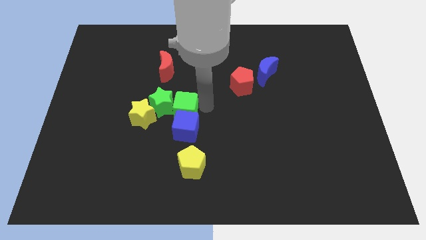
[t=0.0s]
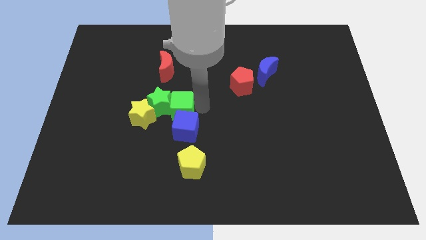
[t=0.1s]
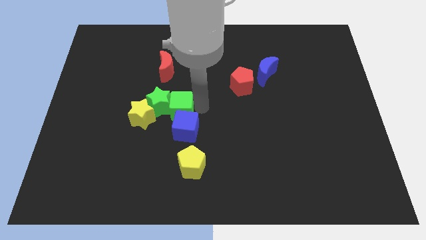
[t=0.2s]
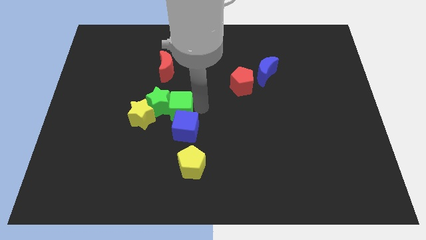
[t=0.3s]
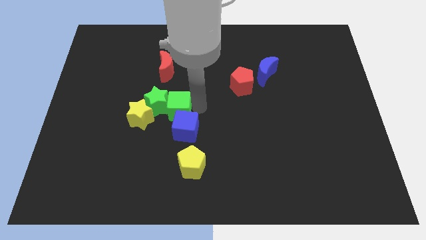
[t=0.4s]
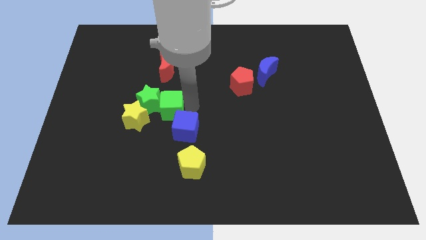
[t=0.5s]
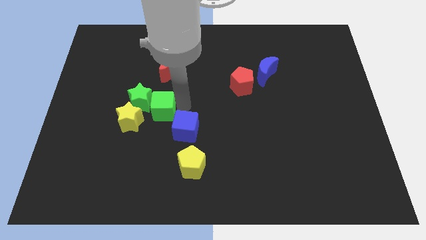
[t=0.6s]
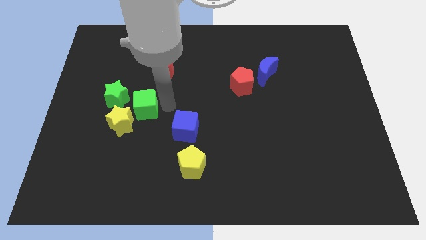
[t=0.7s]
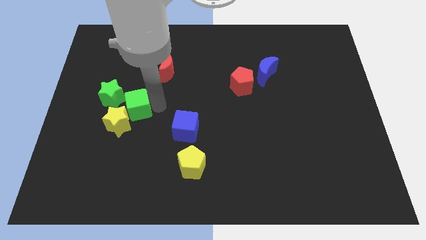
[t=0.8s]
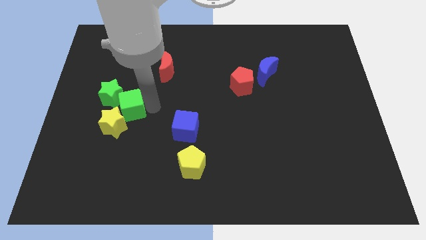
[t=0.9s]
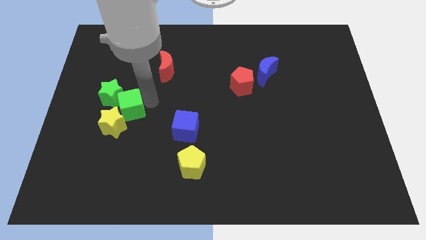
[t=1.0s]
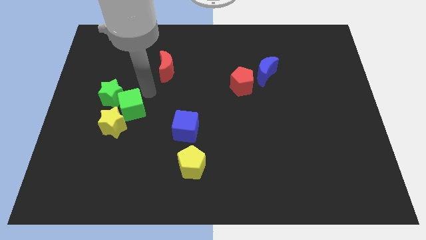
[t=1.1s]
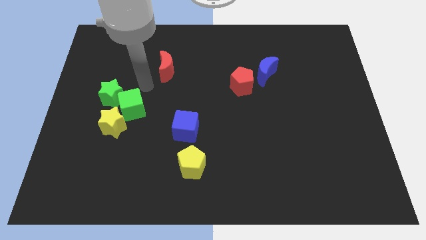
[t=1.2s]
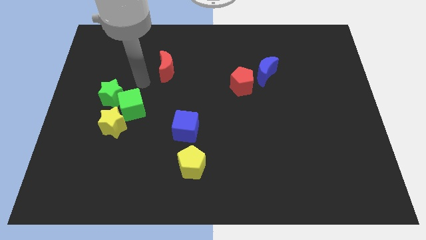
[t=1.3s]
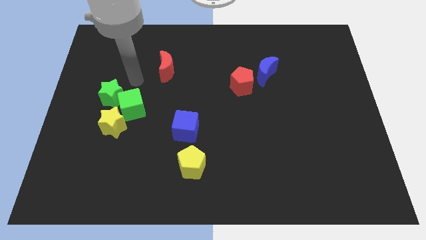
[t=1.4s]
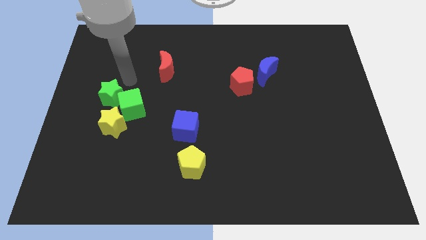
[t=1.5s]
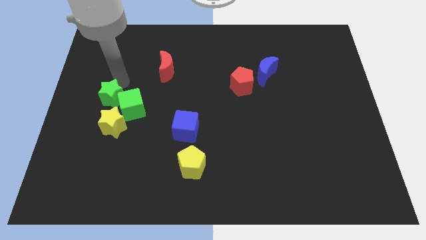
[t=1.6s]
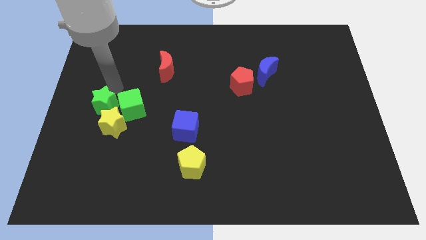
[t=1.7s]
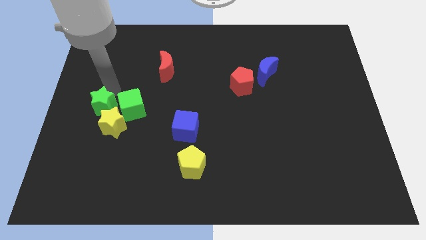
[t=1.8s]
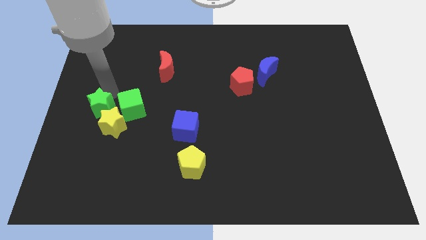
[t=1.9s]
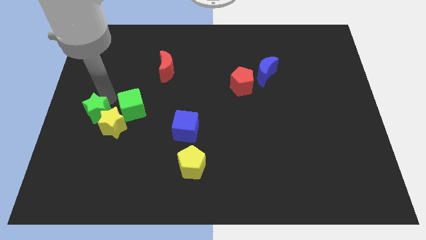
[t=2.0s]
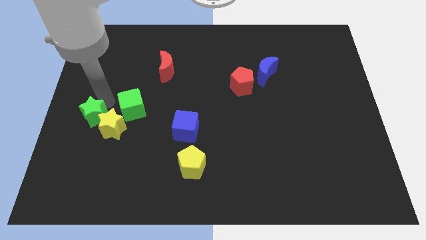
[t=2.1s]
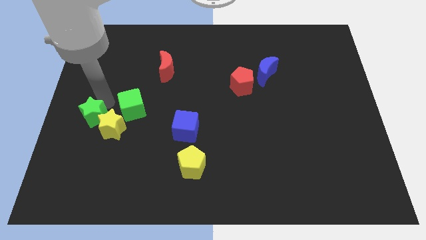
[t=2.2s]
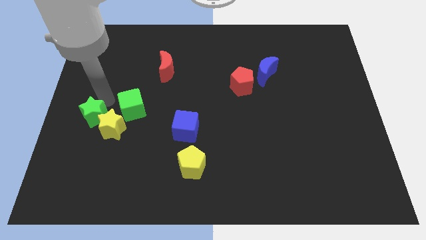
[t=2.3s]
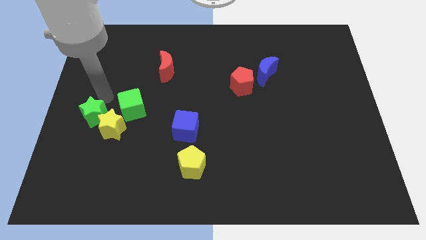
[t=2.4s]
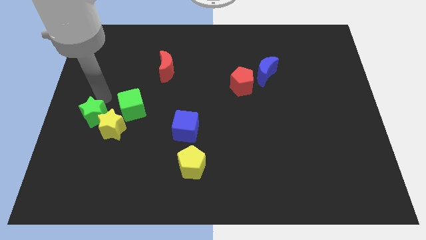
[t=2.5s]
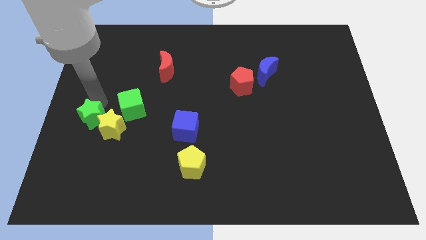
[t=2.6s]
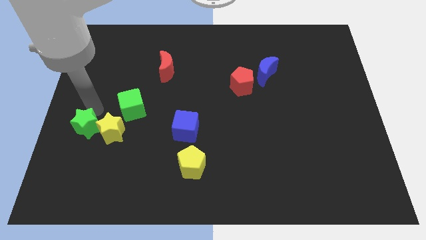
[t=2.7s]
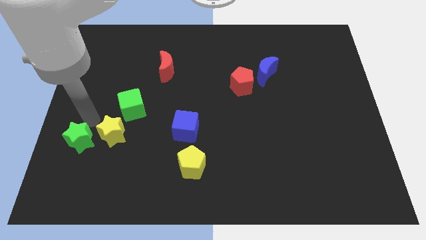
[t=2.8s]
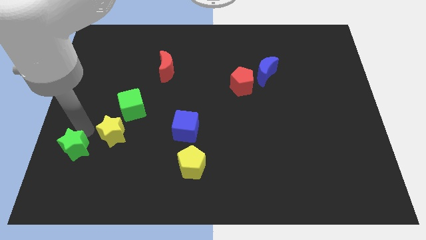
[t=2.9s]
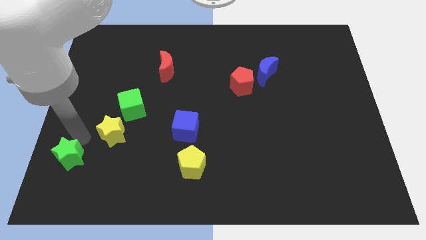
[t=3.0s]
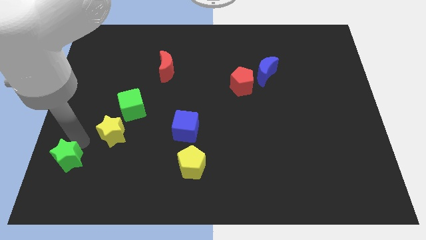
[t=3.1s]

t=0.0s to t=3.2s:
separate the green star from the yellow star

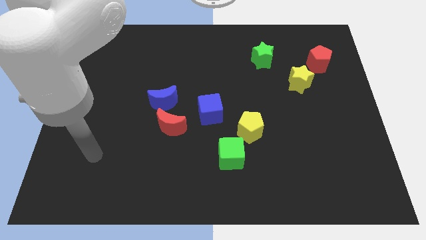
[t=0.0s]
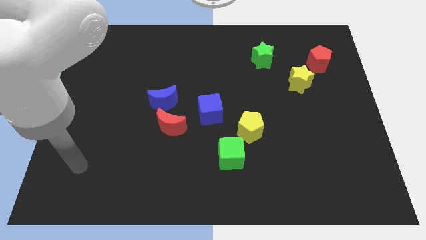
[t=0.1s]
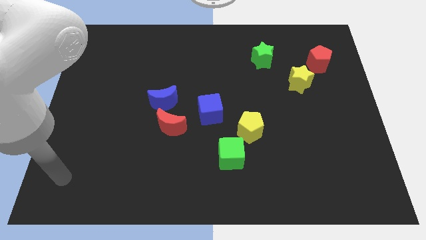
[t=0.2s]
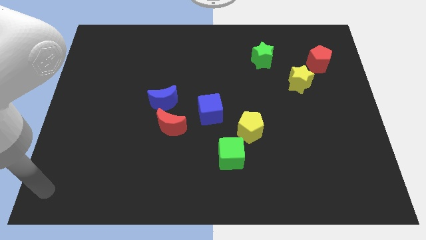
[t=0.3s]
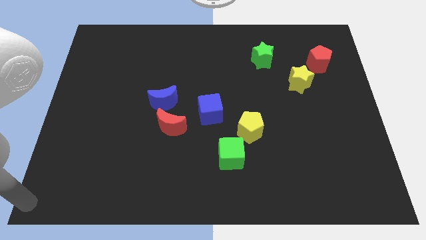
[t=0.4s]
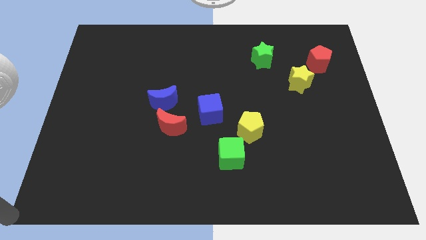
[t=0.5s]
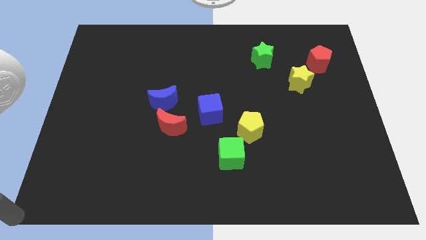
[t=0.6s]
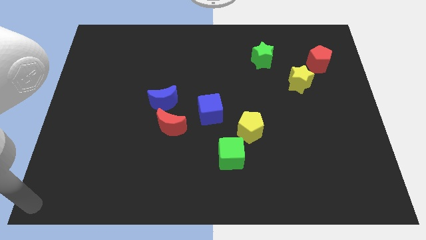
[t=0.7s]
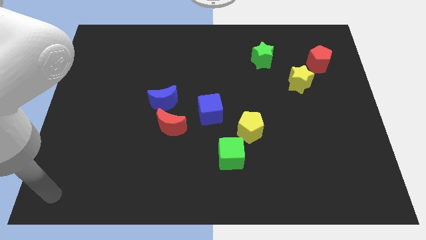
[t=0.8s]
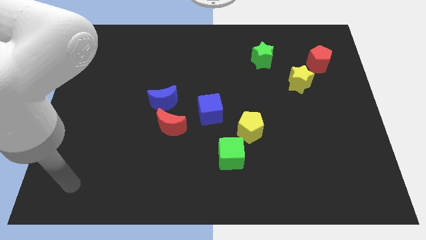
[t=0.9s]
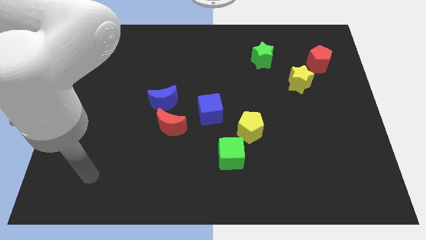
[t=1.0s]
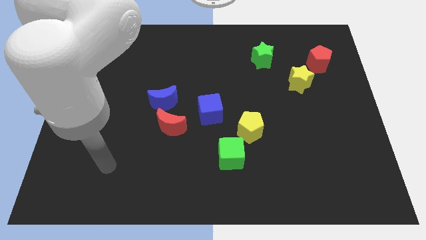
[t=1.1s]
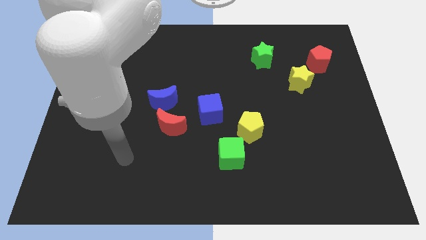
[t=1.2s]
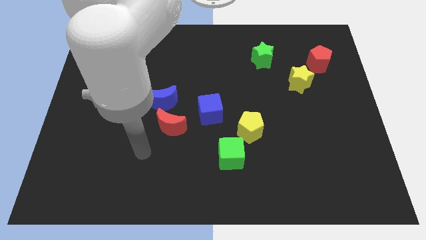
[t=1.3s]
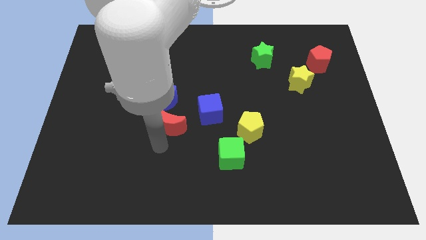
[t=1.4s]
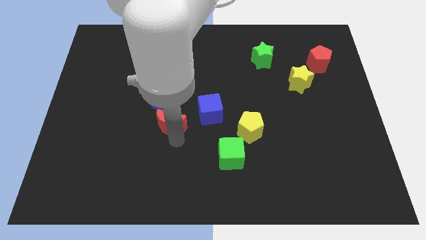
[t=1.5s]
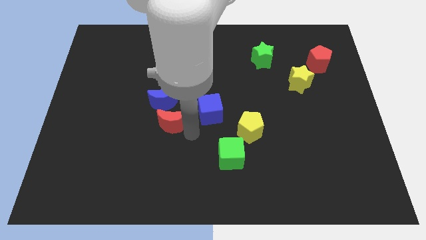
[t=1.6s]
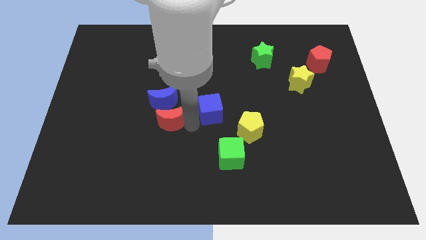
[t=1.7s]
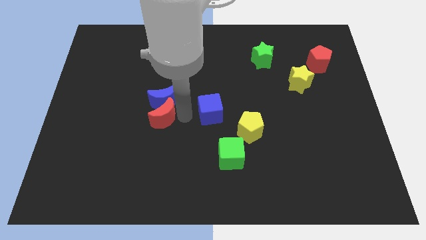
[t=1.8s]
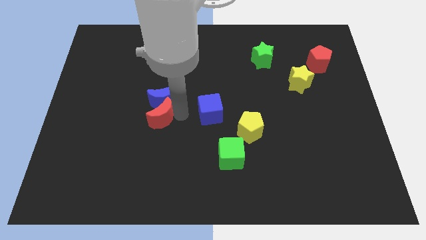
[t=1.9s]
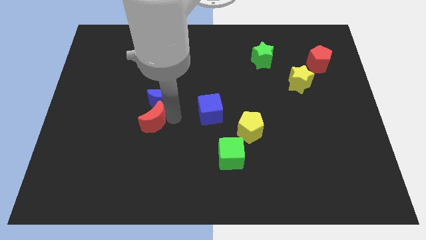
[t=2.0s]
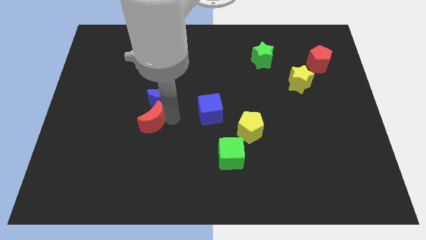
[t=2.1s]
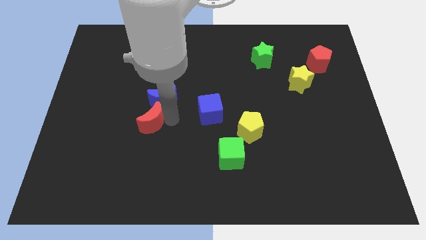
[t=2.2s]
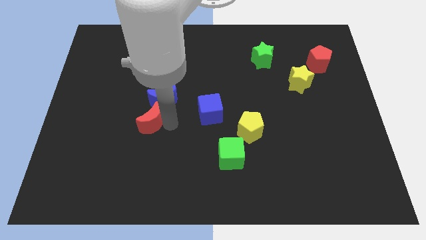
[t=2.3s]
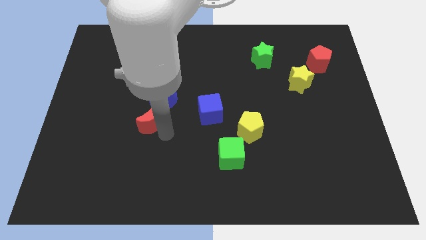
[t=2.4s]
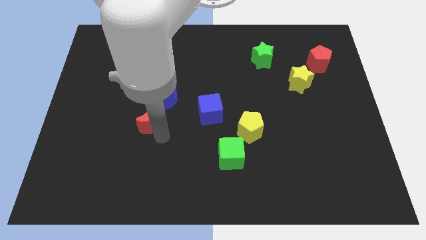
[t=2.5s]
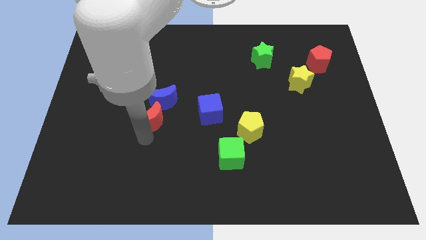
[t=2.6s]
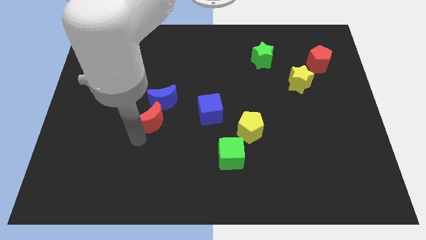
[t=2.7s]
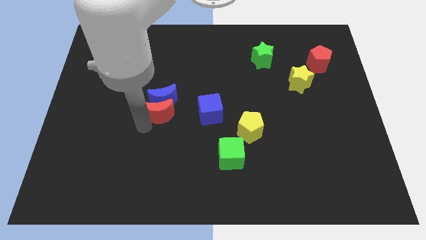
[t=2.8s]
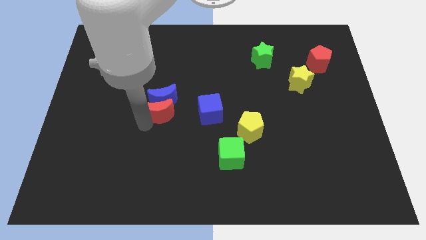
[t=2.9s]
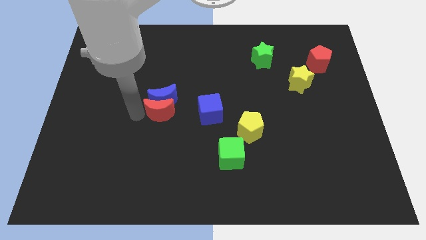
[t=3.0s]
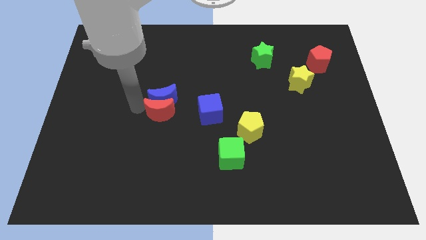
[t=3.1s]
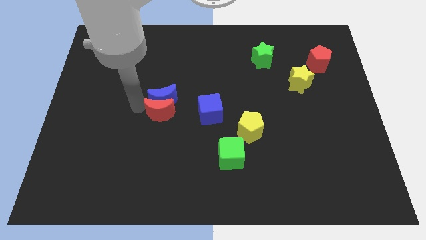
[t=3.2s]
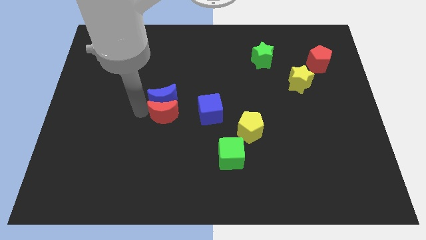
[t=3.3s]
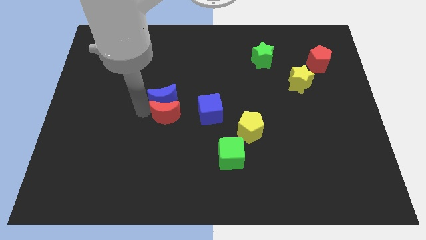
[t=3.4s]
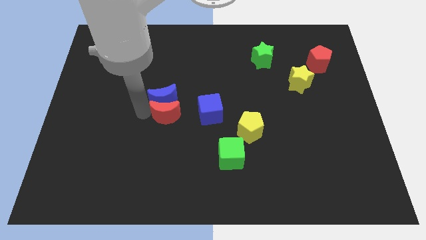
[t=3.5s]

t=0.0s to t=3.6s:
slightly push red crescent into the blue crescent

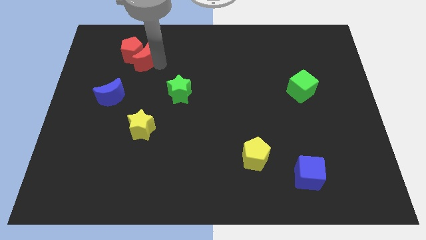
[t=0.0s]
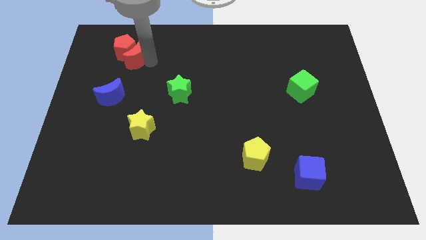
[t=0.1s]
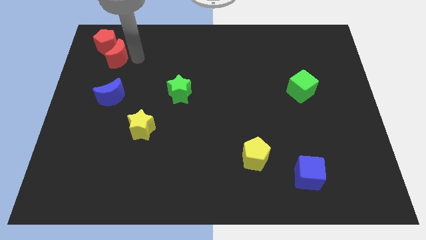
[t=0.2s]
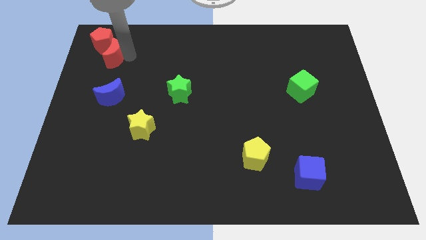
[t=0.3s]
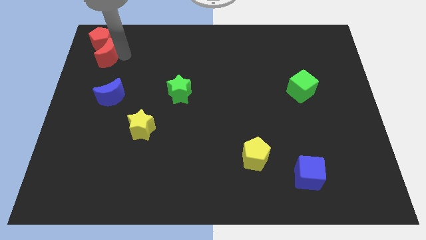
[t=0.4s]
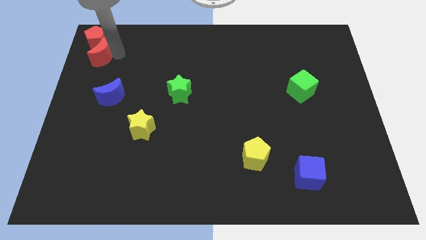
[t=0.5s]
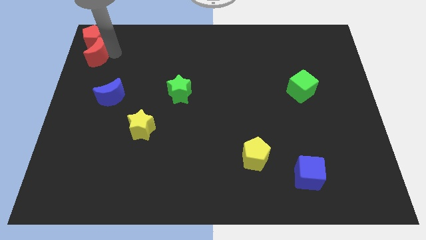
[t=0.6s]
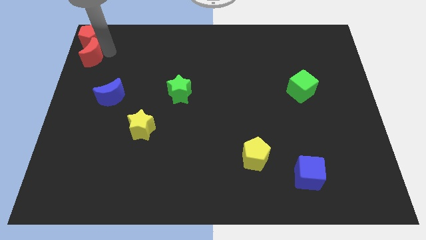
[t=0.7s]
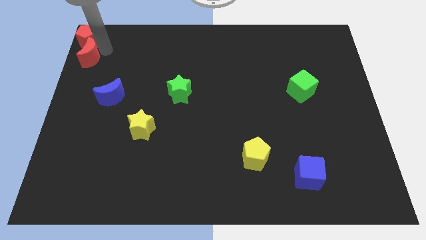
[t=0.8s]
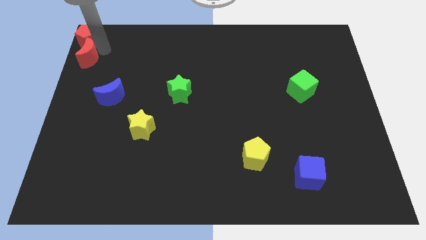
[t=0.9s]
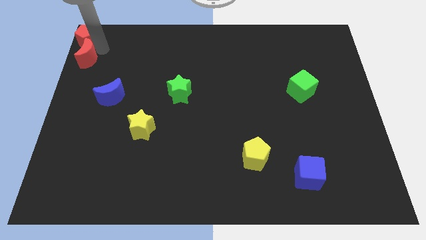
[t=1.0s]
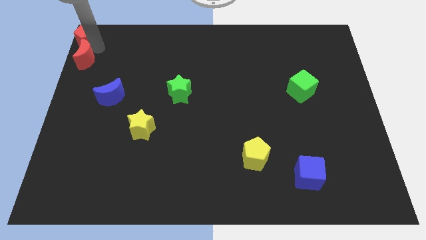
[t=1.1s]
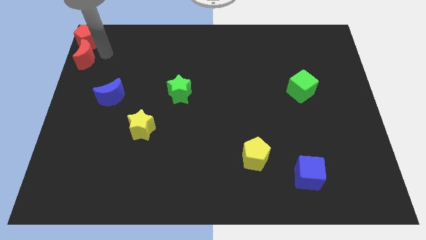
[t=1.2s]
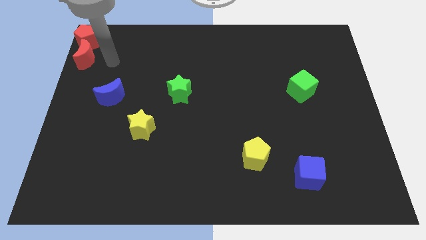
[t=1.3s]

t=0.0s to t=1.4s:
push red pentagon and red crescent towards the top left corner of the board

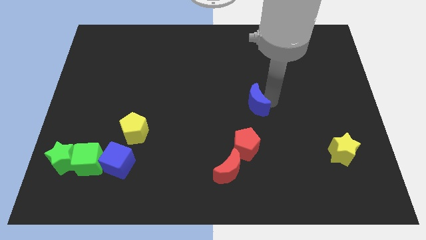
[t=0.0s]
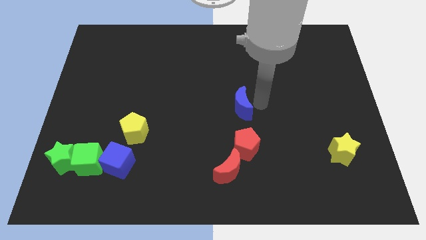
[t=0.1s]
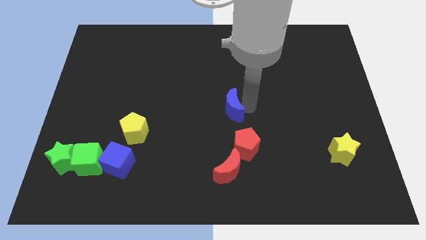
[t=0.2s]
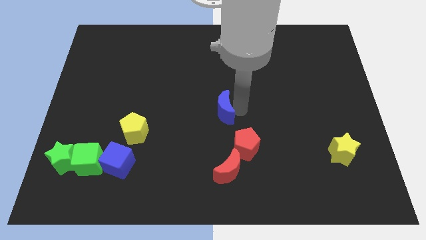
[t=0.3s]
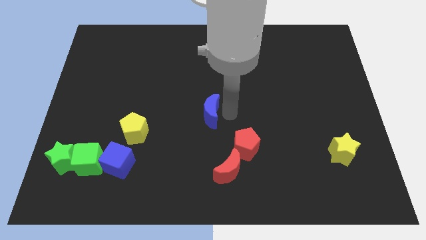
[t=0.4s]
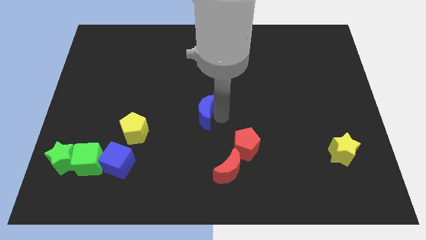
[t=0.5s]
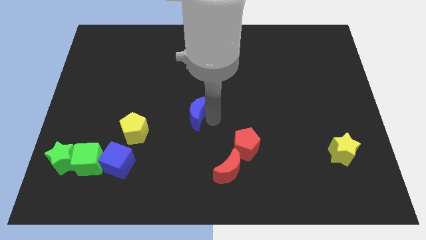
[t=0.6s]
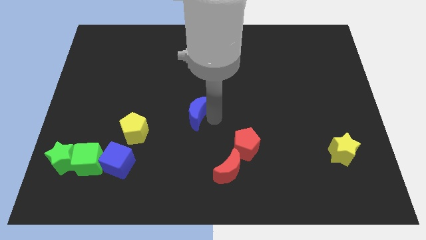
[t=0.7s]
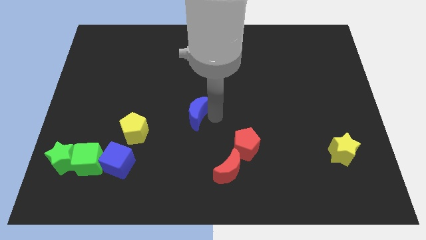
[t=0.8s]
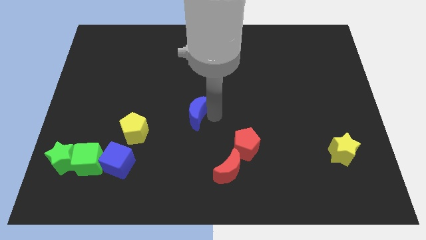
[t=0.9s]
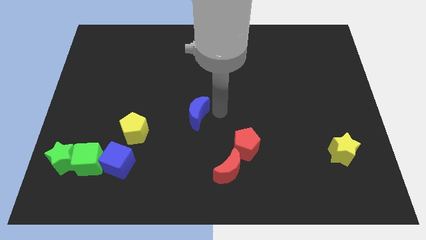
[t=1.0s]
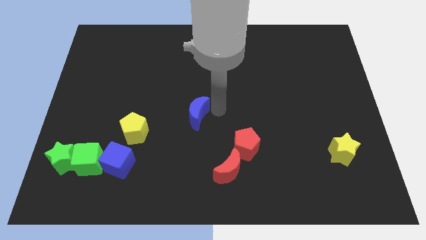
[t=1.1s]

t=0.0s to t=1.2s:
move the blue crescent to the top left of the red pentagon
